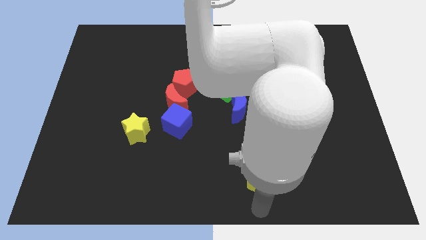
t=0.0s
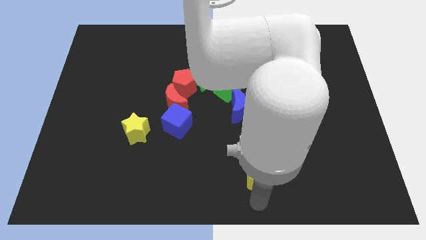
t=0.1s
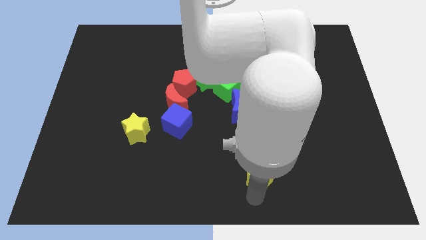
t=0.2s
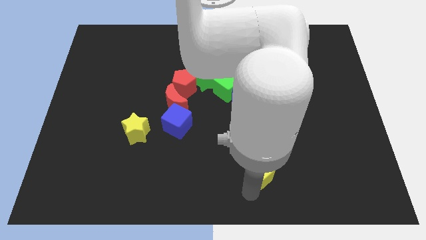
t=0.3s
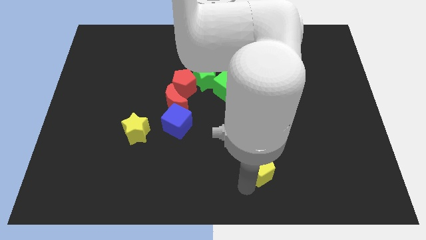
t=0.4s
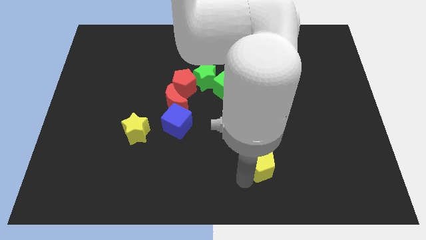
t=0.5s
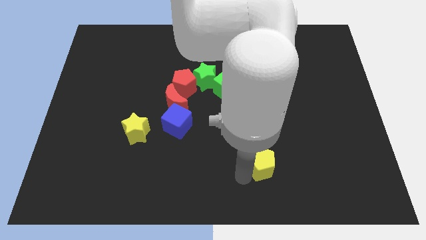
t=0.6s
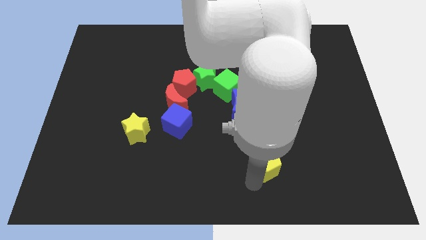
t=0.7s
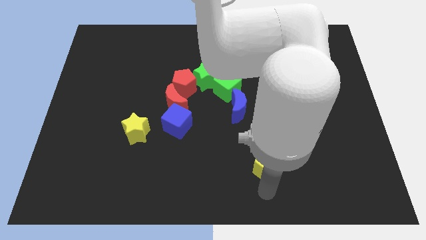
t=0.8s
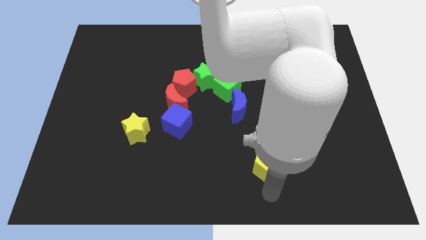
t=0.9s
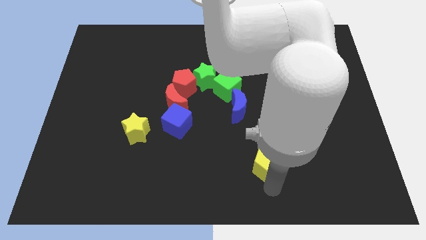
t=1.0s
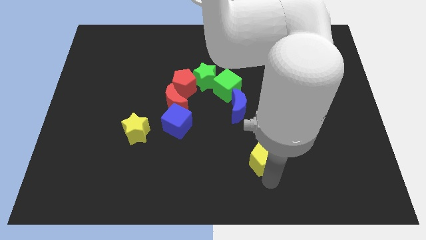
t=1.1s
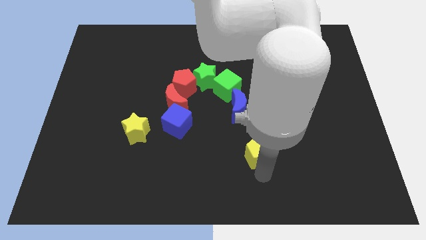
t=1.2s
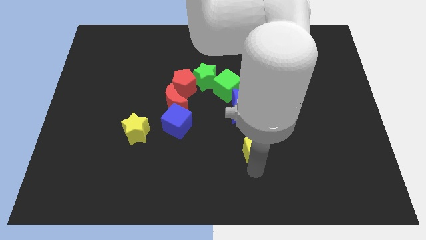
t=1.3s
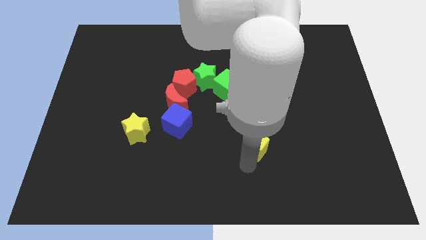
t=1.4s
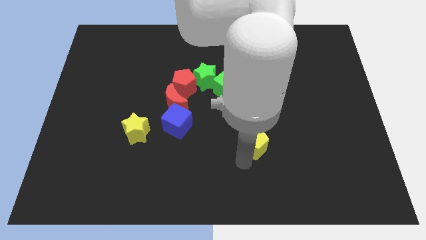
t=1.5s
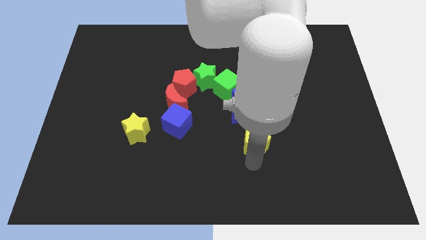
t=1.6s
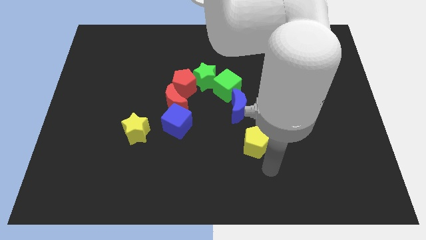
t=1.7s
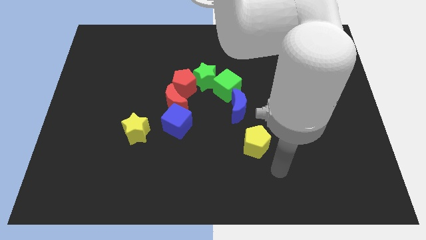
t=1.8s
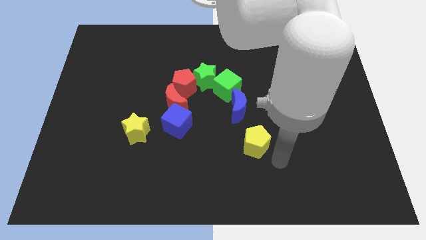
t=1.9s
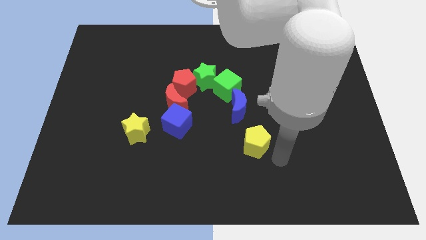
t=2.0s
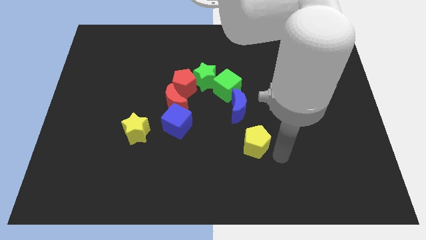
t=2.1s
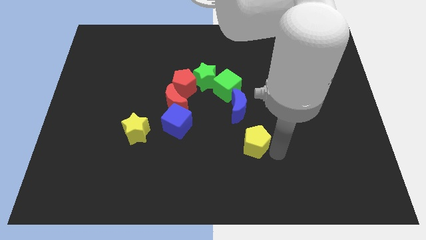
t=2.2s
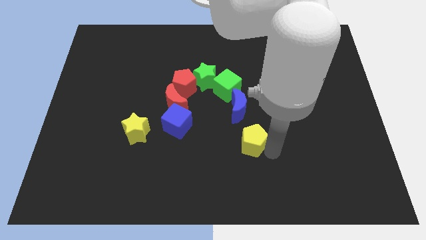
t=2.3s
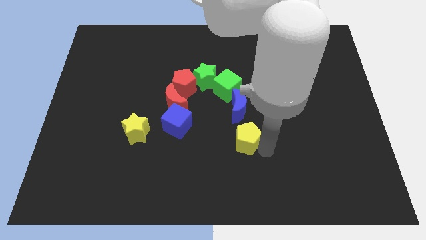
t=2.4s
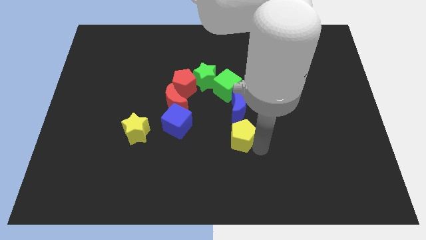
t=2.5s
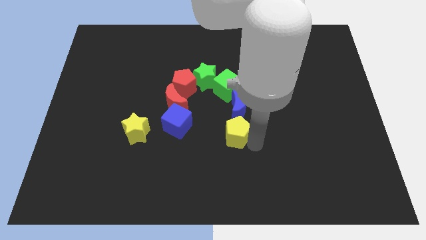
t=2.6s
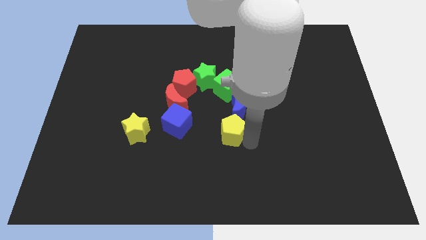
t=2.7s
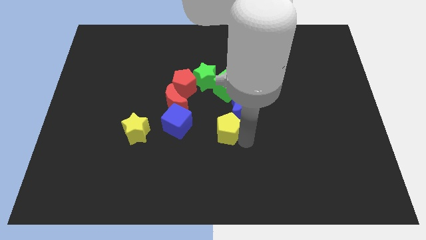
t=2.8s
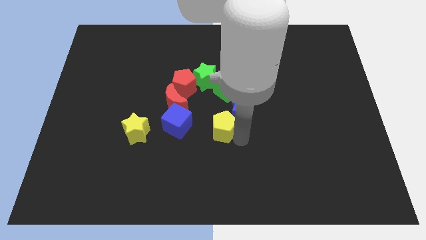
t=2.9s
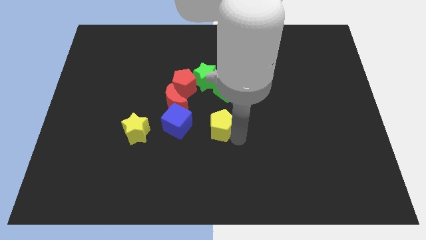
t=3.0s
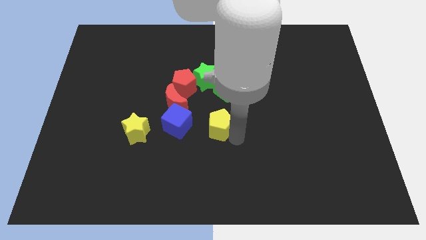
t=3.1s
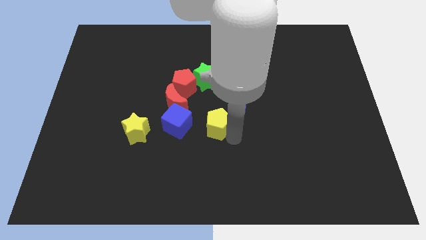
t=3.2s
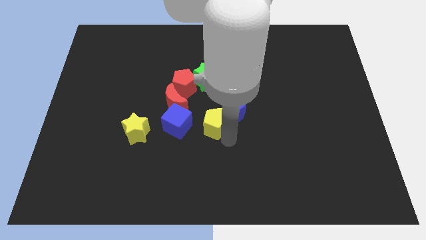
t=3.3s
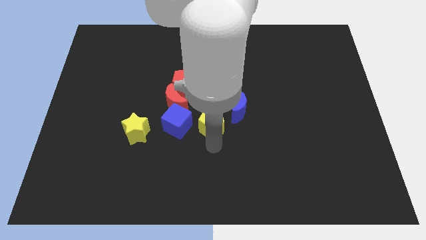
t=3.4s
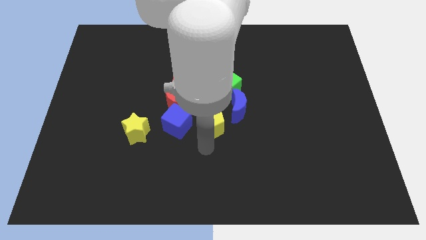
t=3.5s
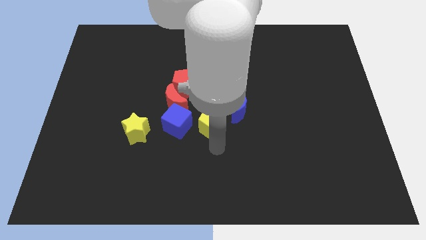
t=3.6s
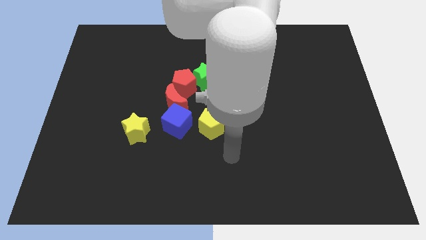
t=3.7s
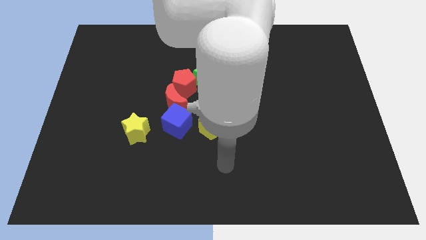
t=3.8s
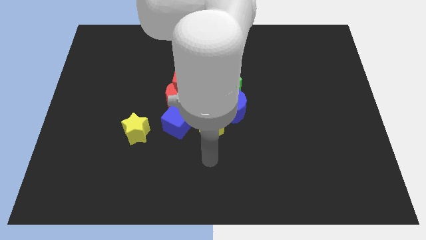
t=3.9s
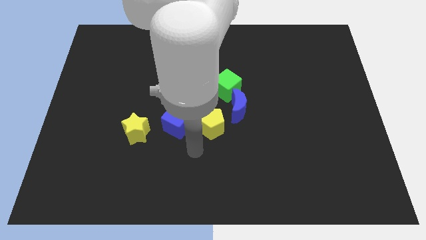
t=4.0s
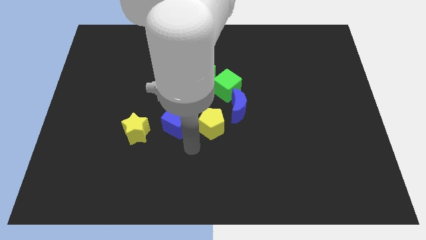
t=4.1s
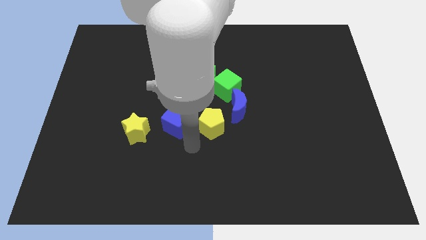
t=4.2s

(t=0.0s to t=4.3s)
push the yellow pentagon adjacent to the blue cube

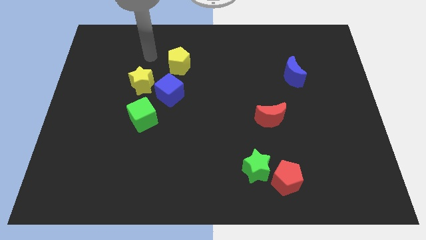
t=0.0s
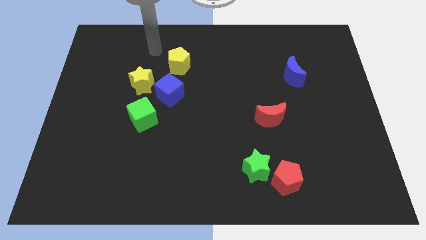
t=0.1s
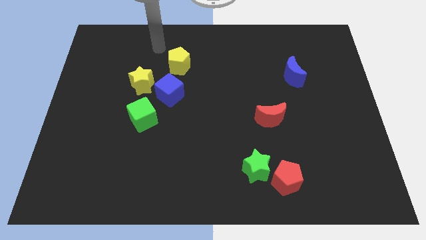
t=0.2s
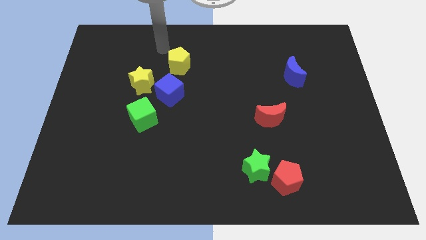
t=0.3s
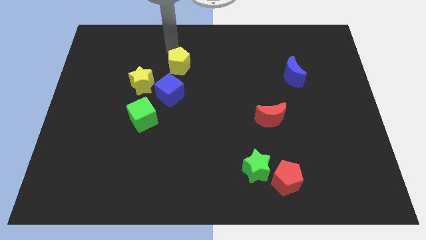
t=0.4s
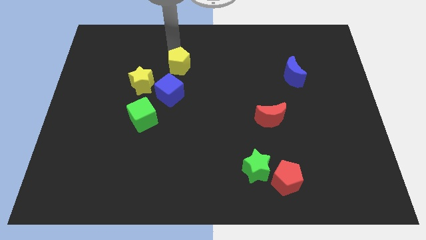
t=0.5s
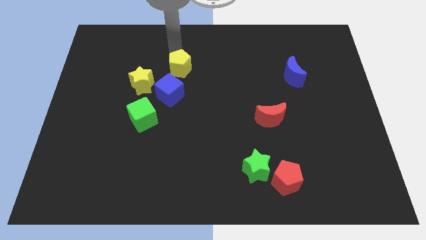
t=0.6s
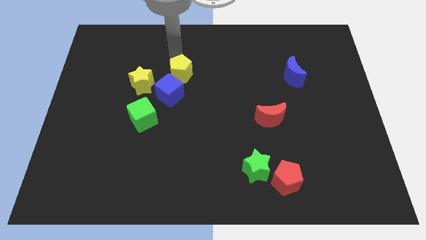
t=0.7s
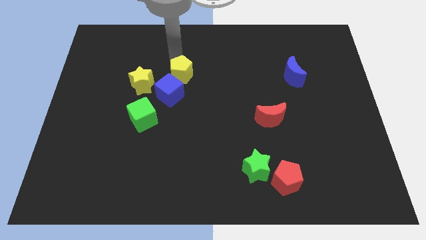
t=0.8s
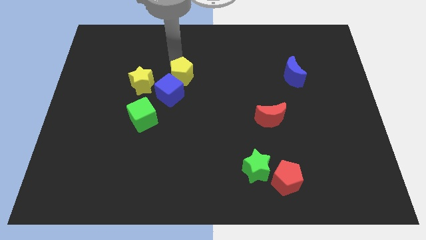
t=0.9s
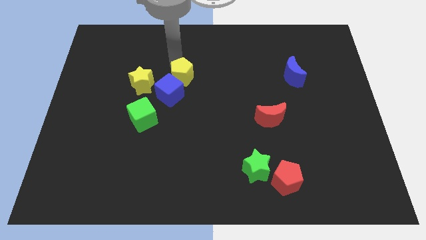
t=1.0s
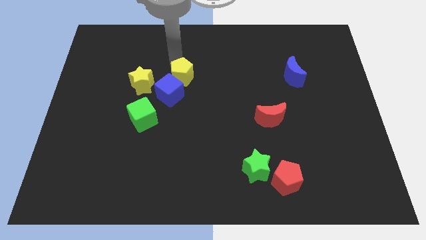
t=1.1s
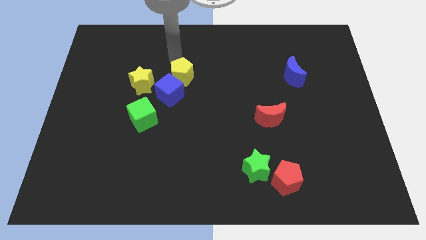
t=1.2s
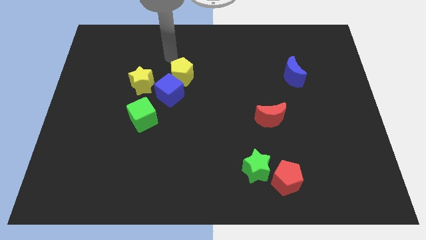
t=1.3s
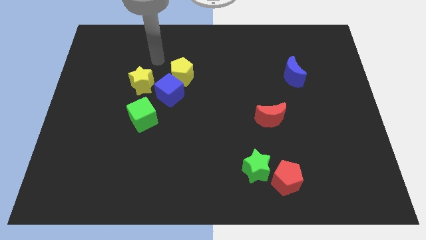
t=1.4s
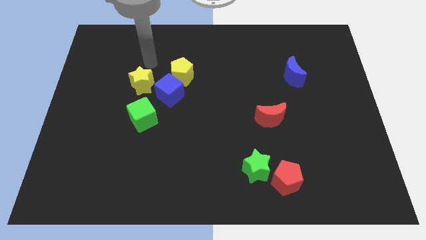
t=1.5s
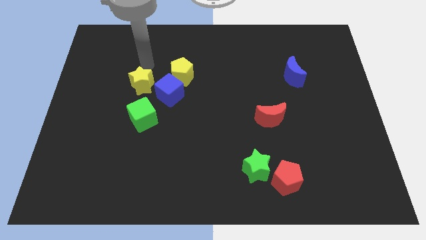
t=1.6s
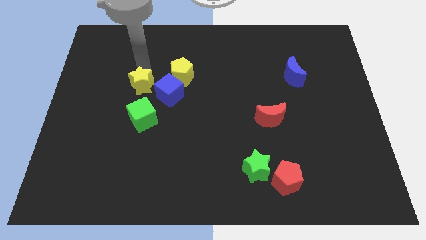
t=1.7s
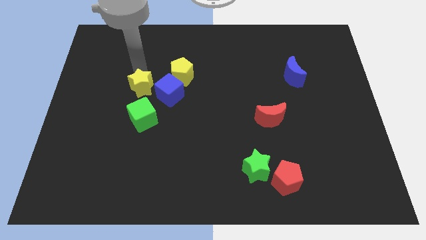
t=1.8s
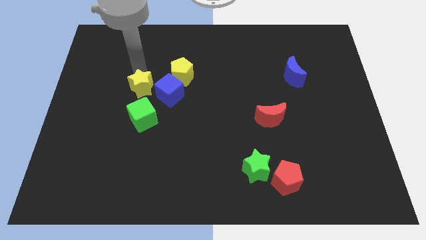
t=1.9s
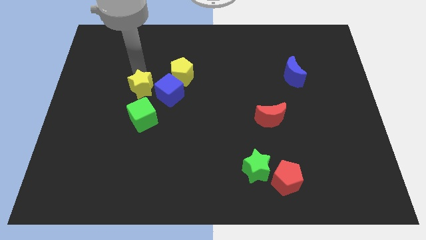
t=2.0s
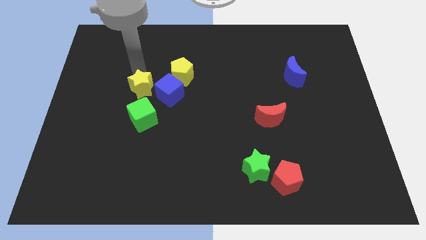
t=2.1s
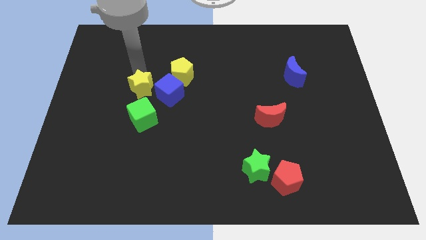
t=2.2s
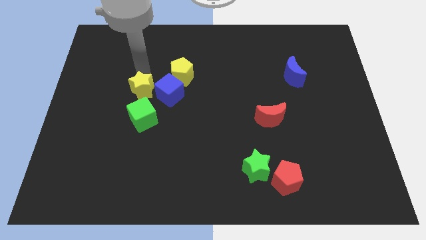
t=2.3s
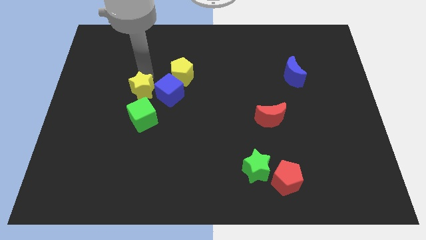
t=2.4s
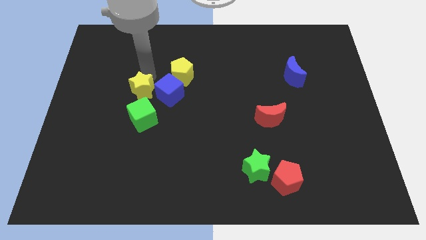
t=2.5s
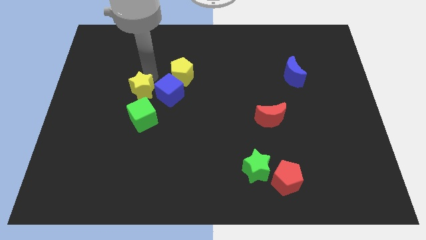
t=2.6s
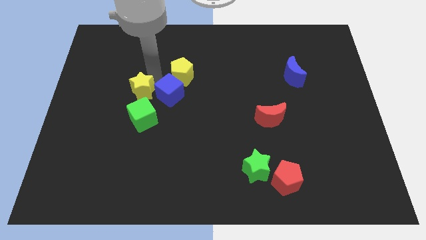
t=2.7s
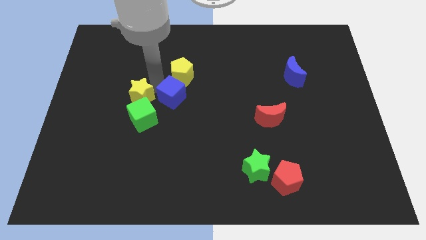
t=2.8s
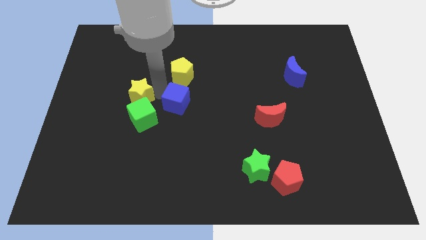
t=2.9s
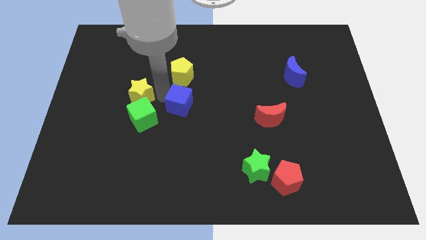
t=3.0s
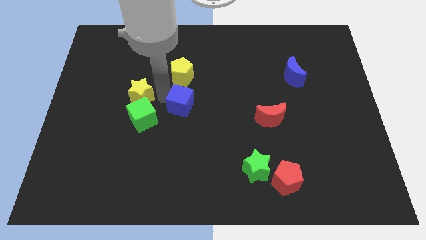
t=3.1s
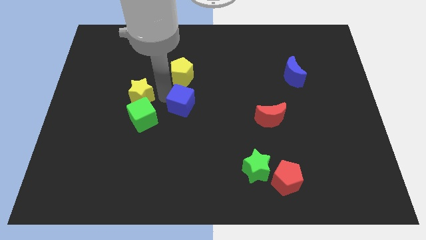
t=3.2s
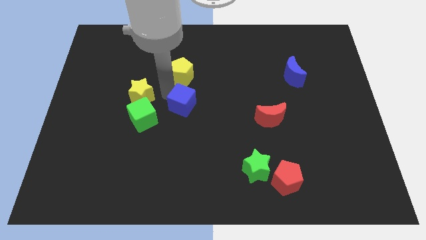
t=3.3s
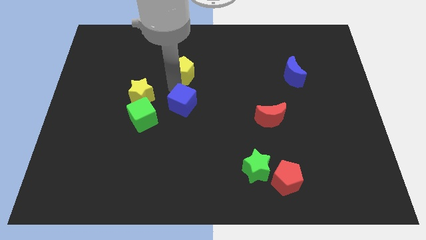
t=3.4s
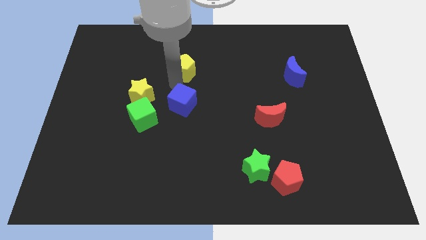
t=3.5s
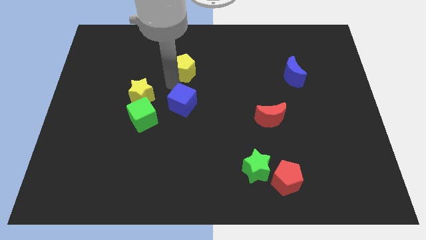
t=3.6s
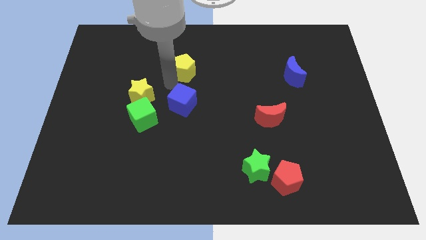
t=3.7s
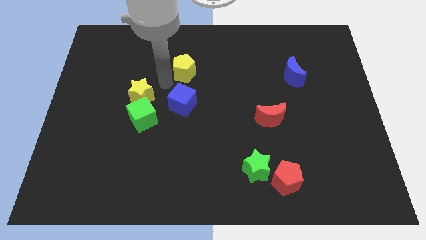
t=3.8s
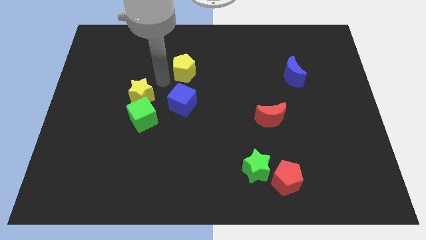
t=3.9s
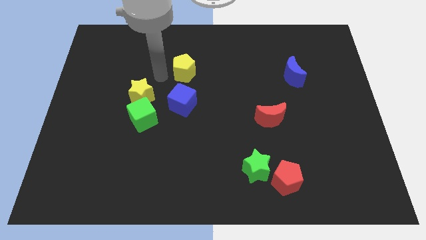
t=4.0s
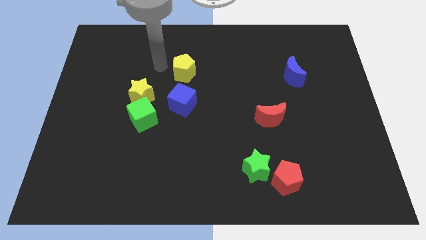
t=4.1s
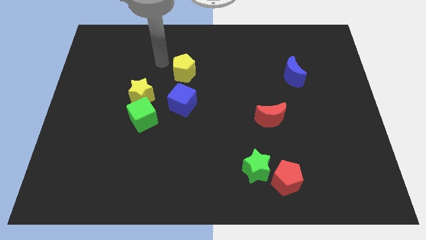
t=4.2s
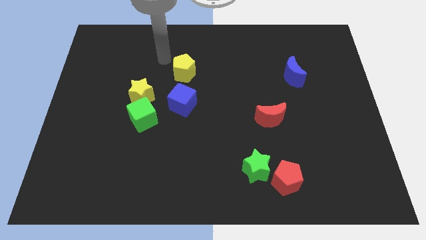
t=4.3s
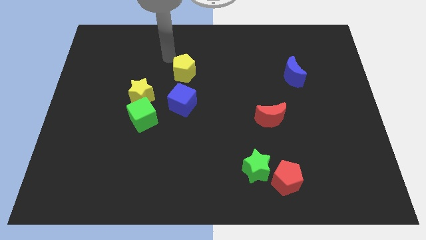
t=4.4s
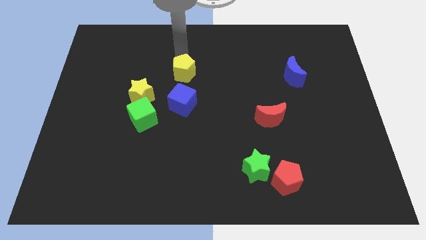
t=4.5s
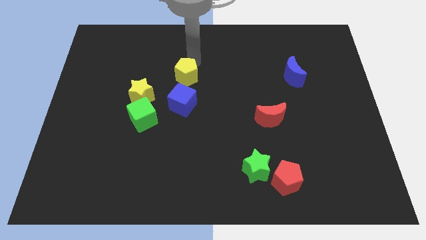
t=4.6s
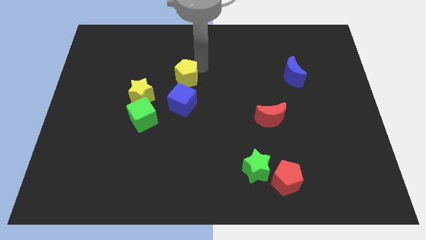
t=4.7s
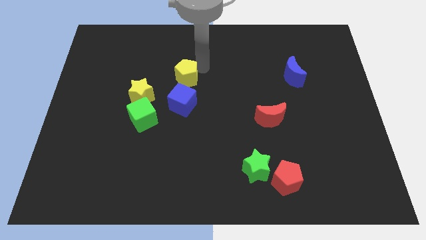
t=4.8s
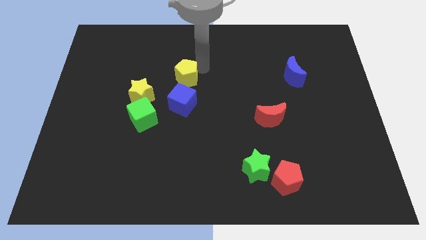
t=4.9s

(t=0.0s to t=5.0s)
move the yellow pentagon above the blue cube
